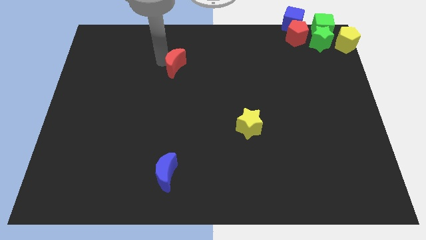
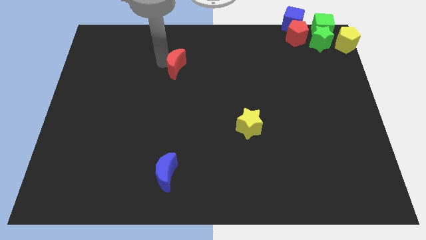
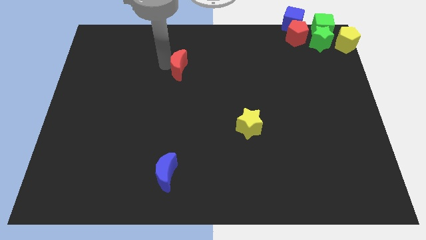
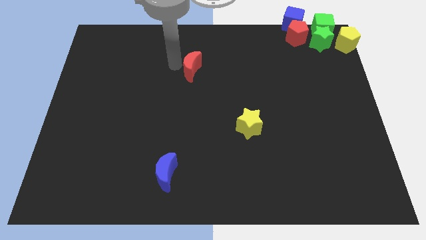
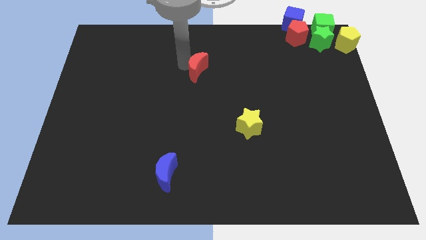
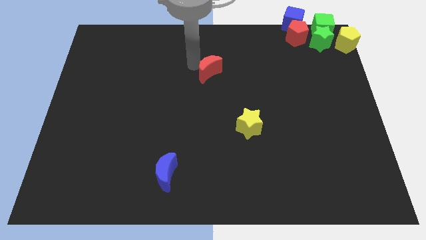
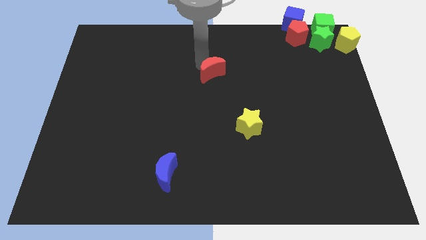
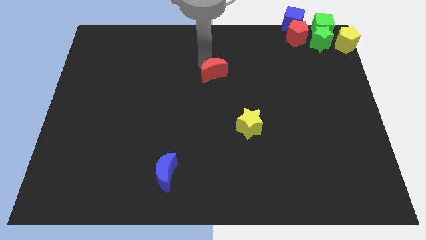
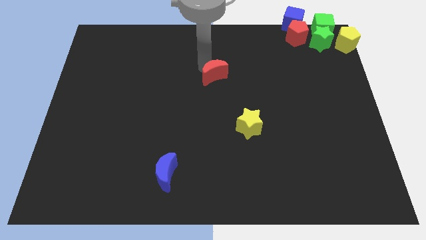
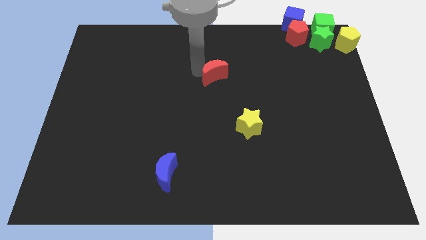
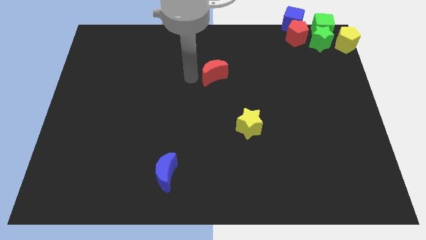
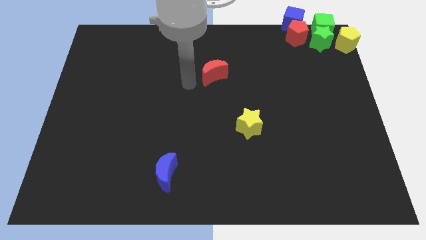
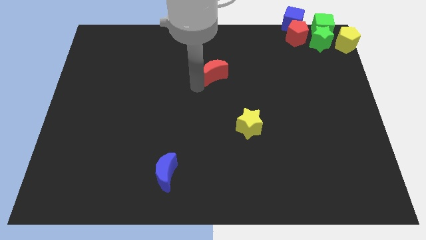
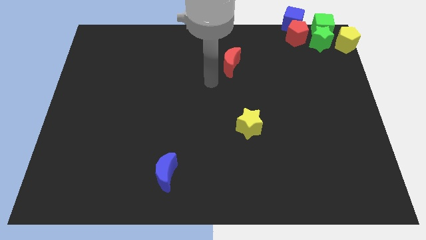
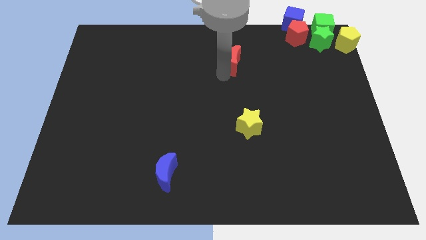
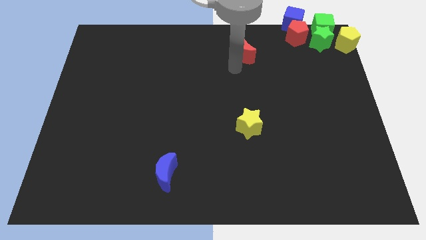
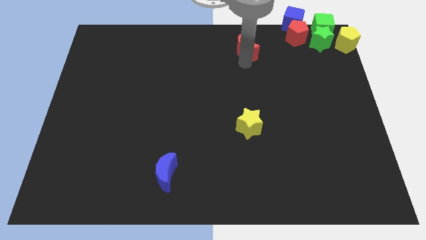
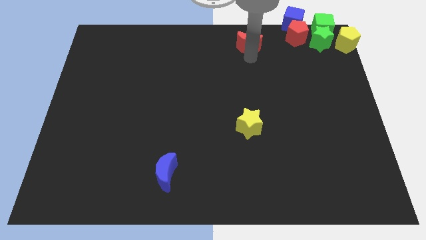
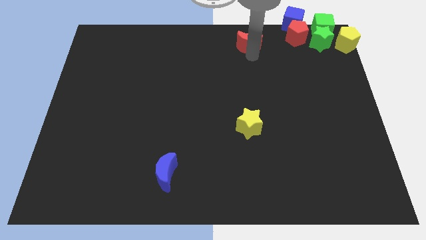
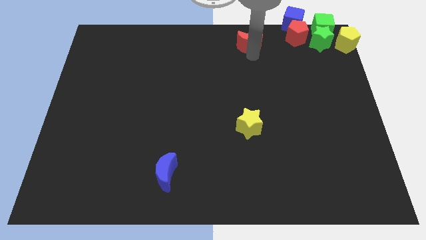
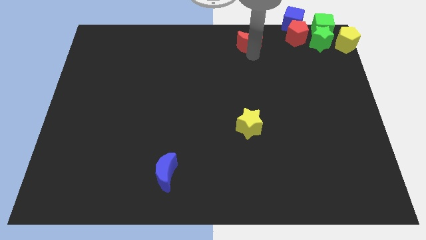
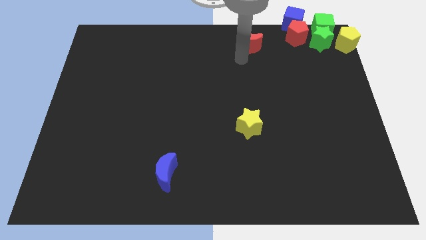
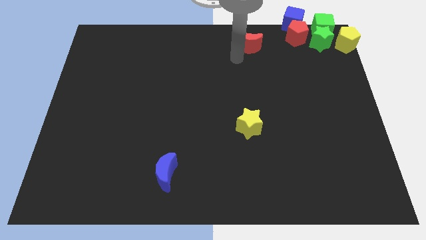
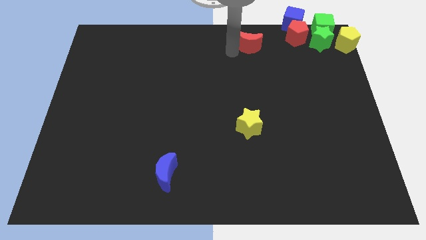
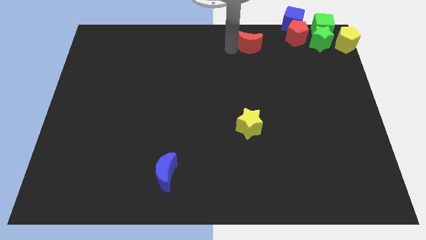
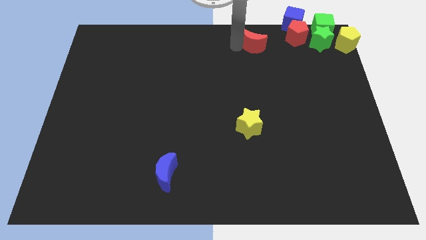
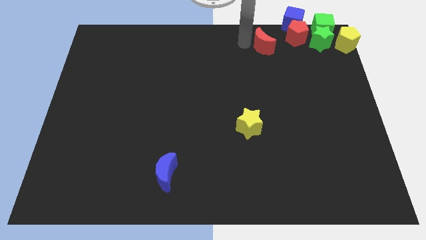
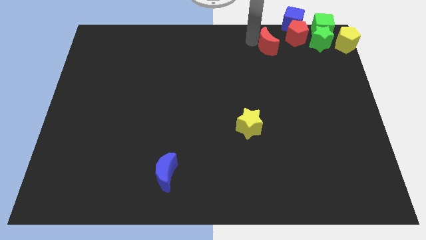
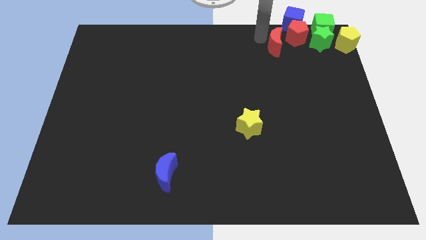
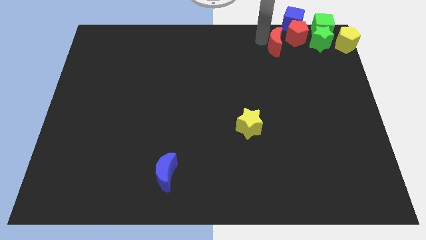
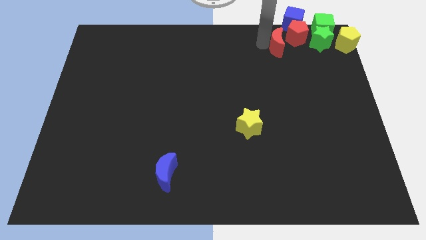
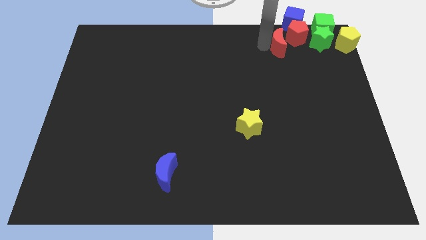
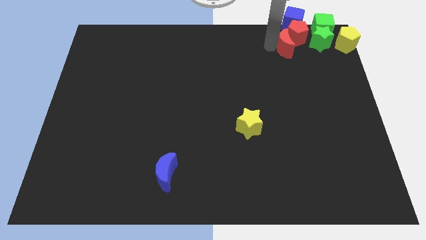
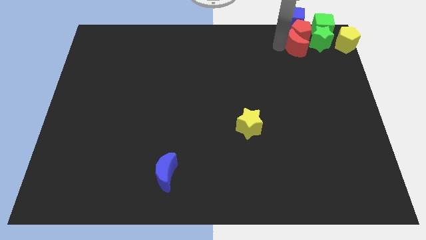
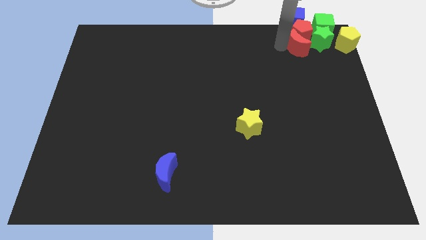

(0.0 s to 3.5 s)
push the red crescent close to the red pentagon

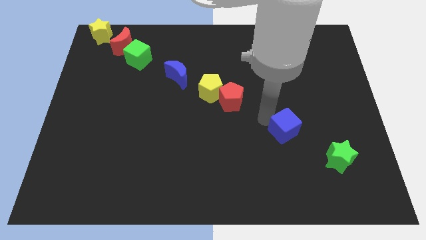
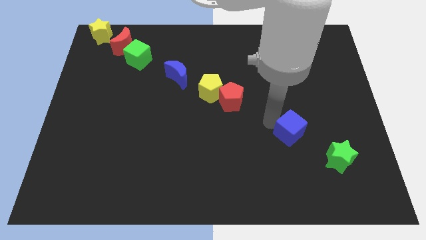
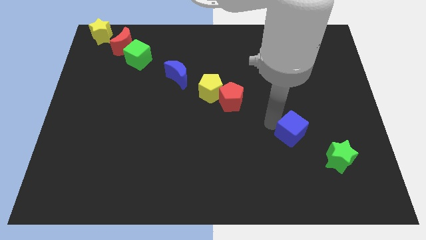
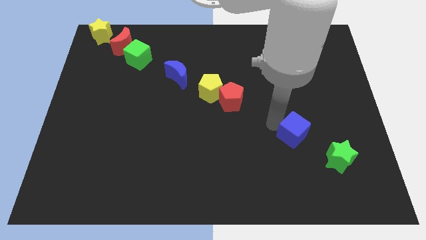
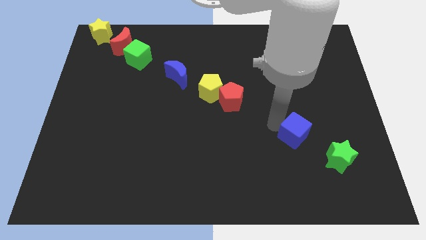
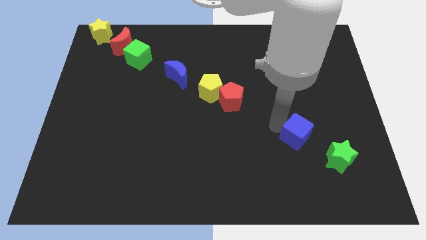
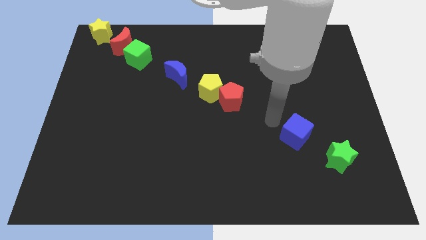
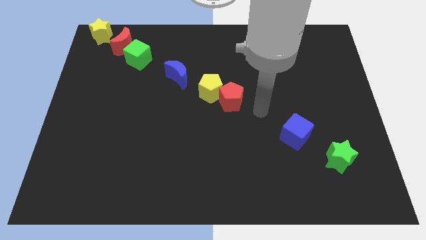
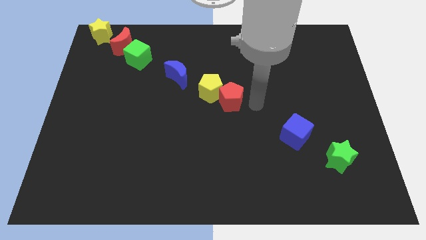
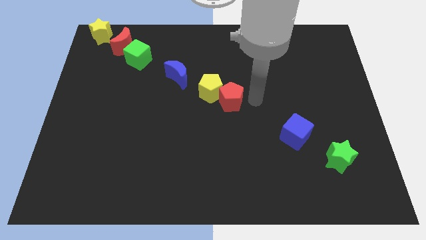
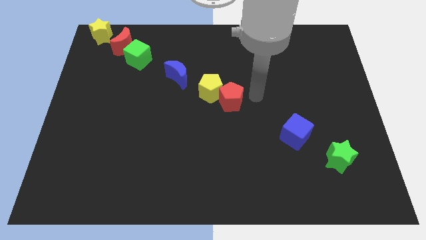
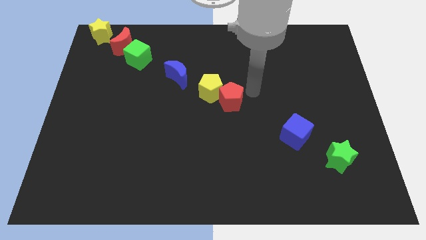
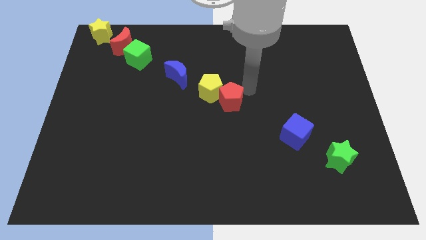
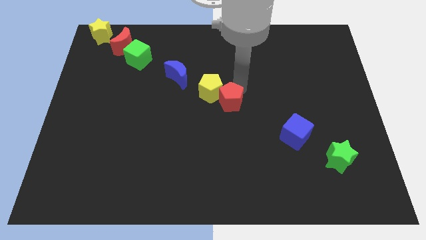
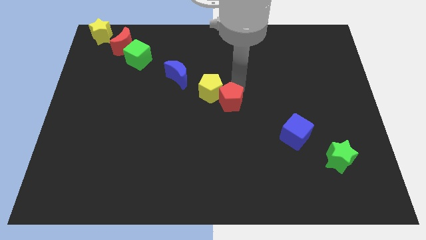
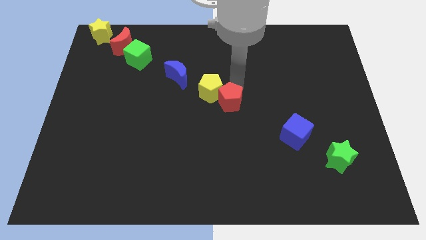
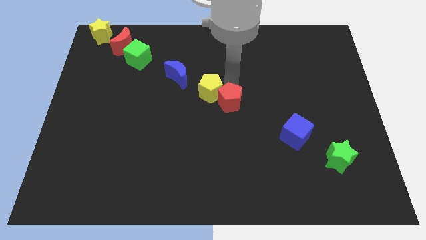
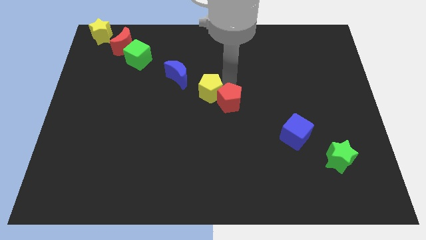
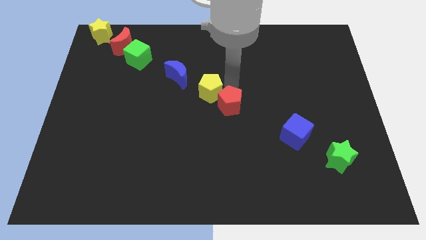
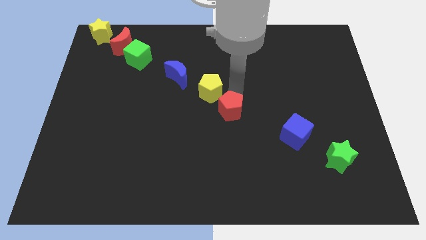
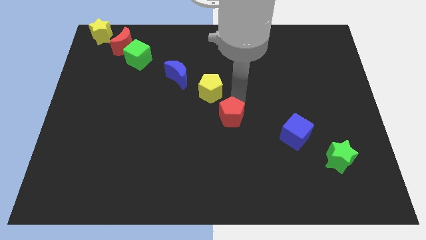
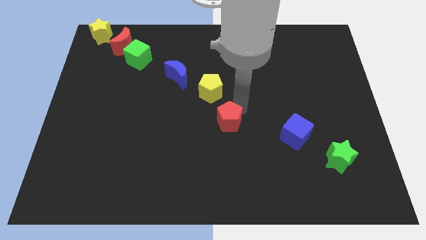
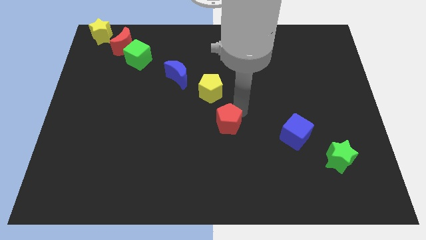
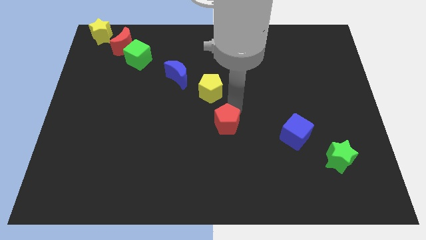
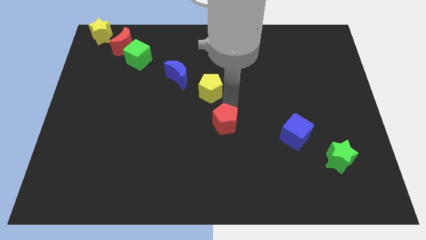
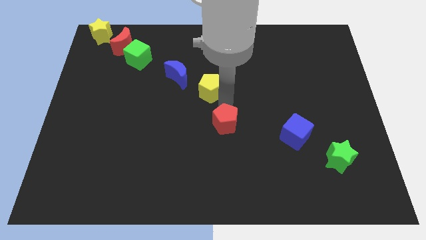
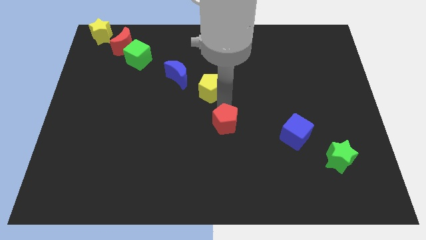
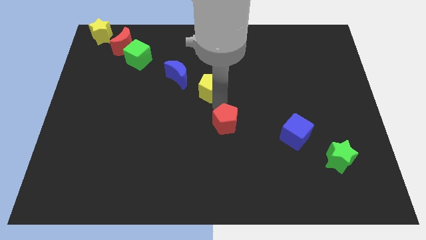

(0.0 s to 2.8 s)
slightly move the blue cube towards the green star

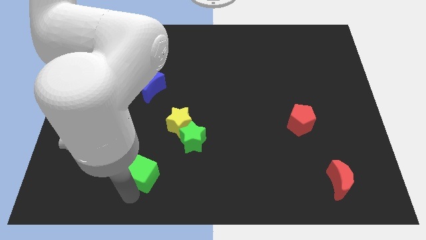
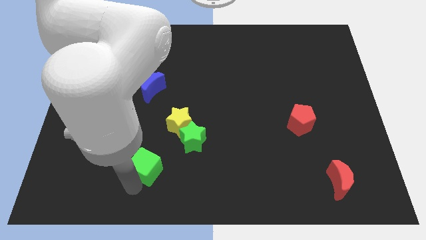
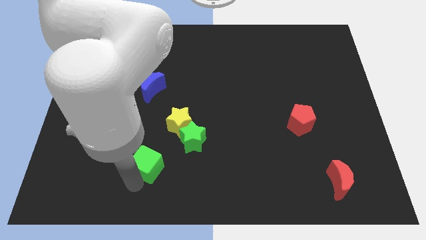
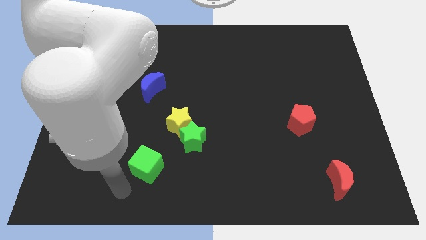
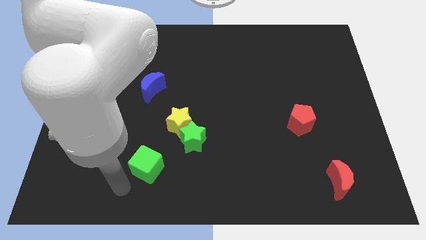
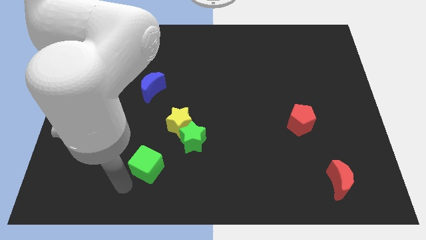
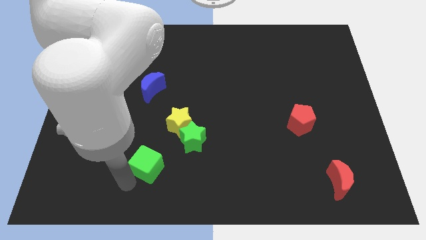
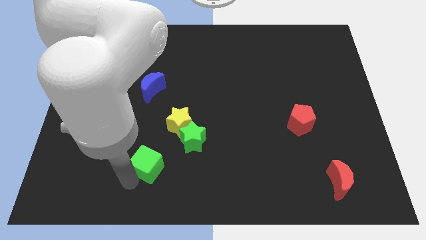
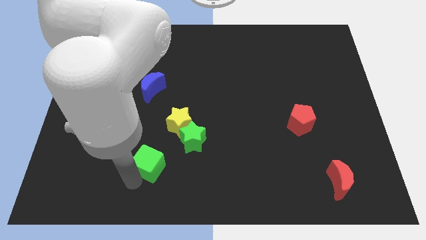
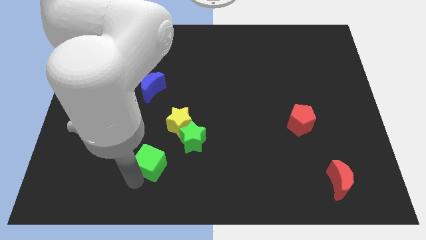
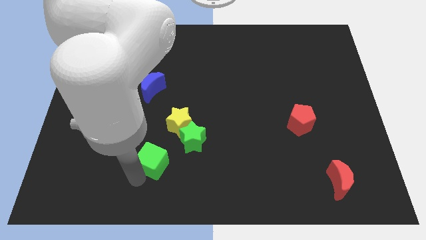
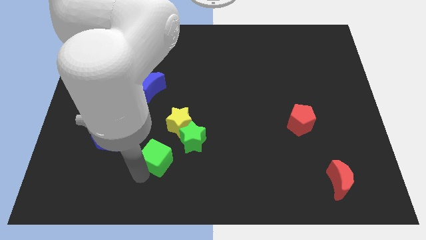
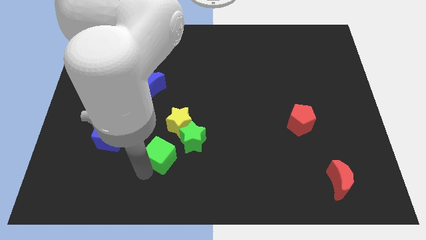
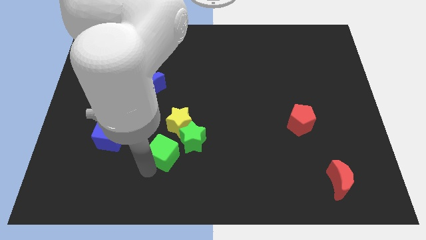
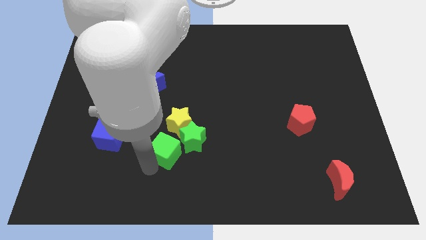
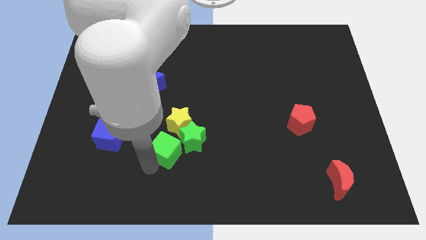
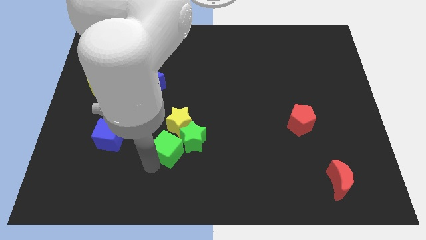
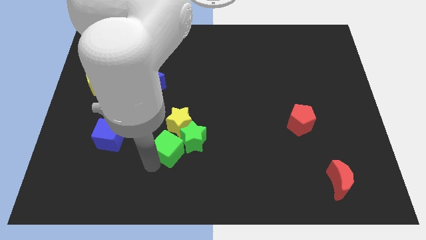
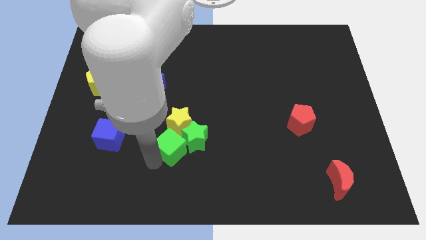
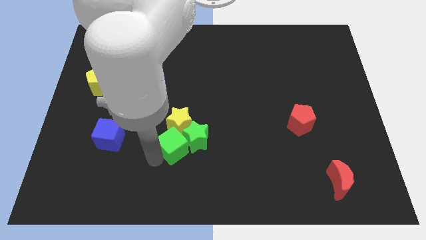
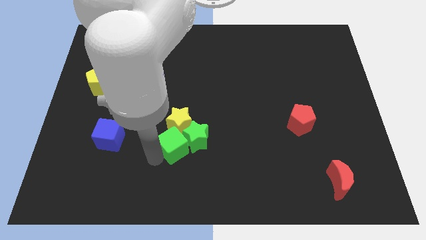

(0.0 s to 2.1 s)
place the green cube bottom to the yellow star

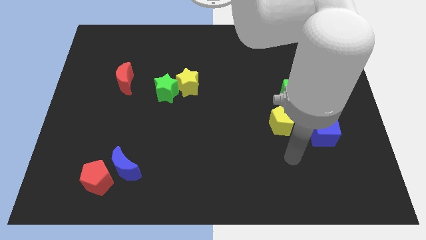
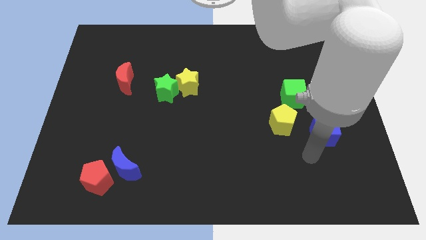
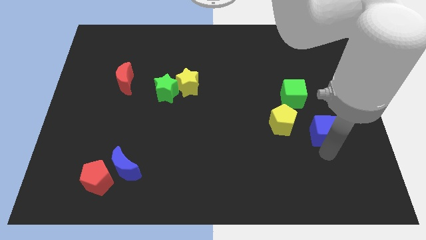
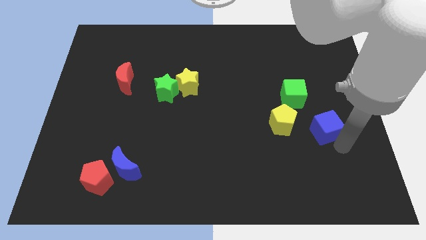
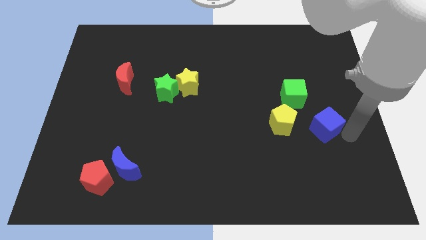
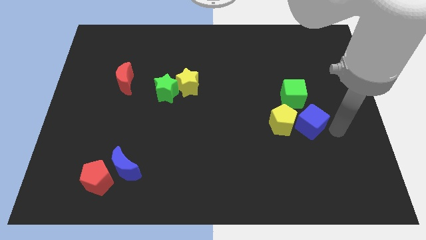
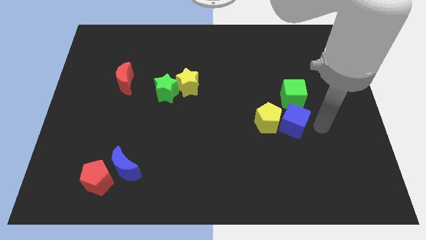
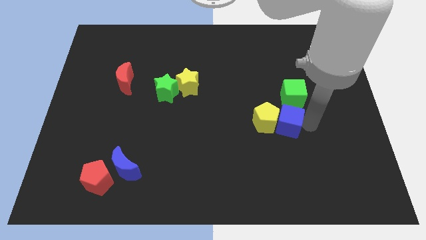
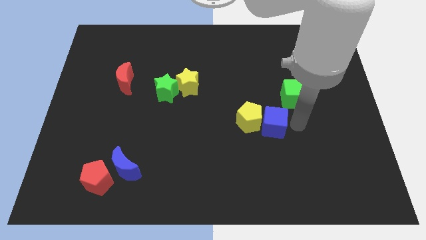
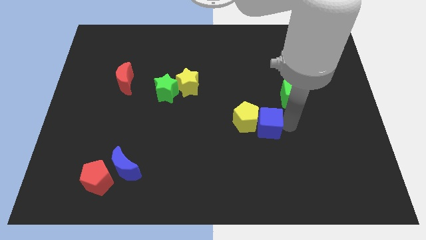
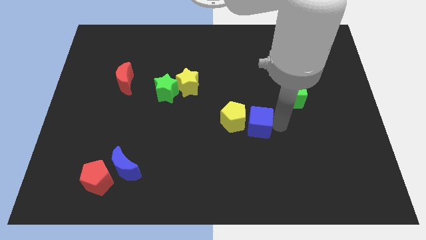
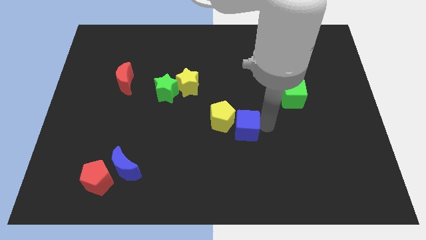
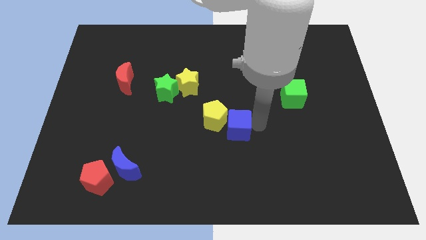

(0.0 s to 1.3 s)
push the yellow pentagon with the blue cube
